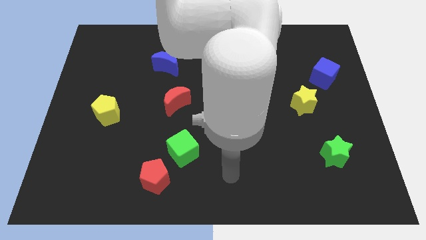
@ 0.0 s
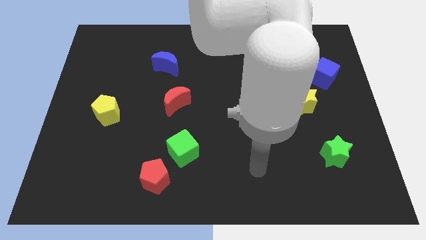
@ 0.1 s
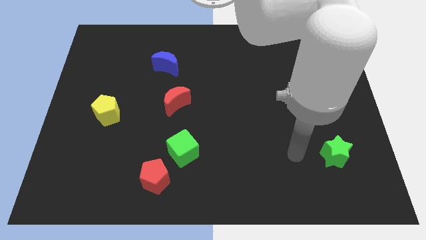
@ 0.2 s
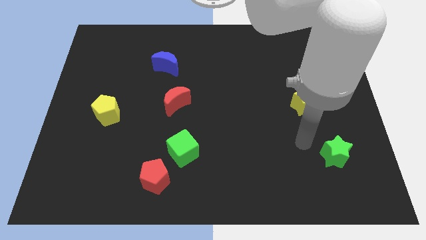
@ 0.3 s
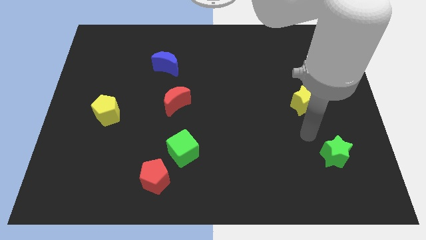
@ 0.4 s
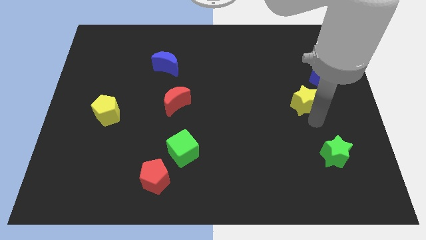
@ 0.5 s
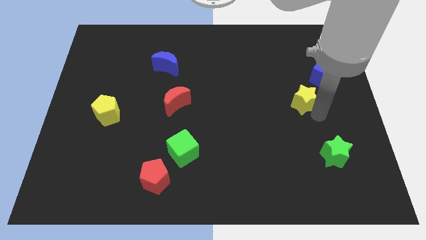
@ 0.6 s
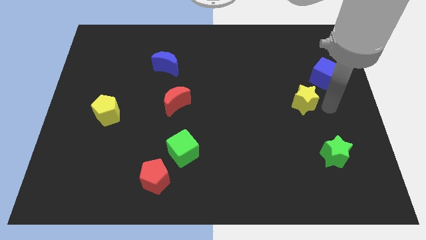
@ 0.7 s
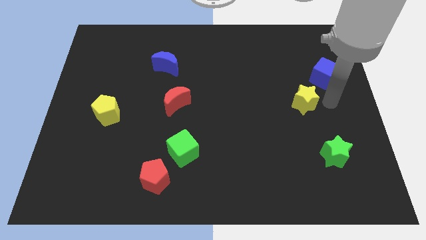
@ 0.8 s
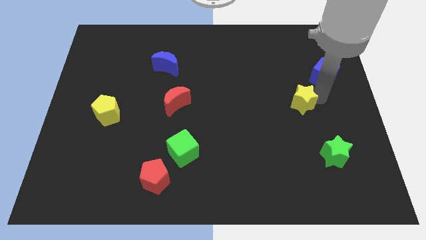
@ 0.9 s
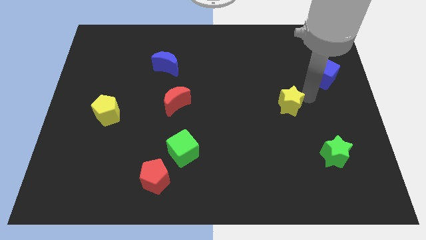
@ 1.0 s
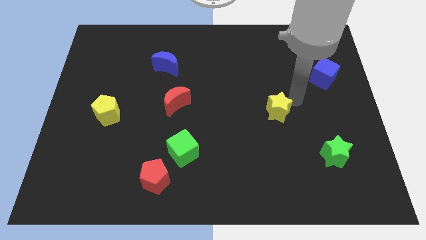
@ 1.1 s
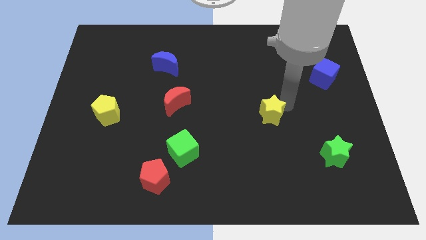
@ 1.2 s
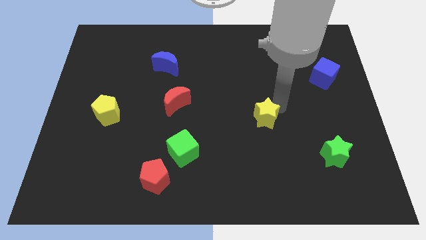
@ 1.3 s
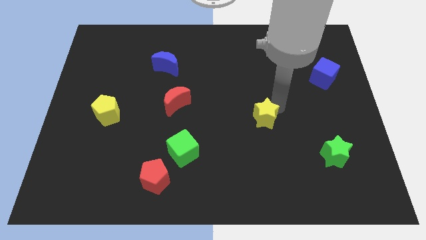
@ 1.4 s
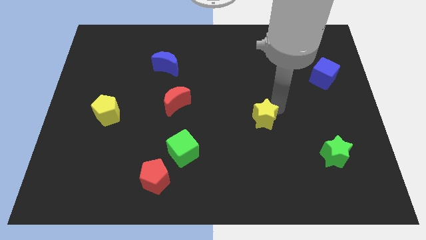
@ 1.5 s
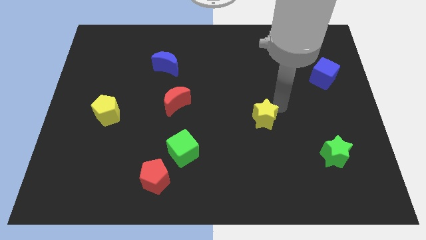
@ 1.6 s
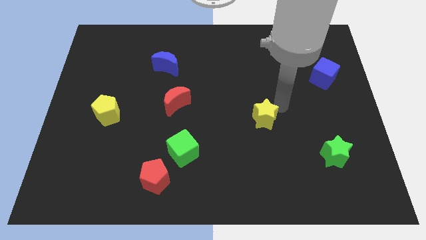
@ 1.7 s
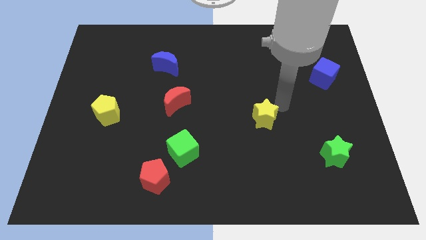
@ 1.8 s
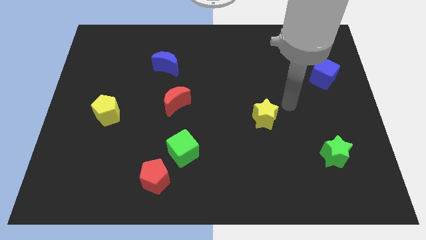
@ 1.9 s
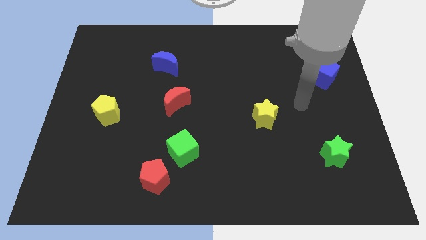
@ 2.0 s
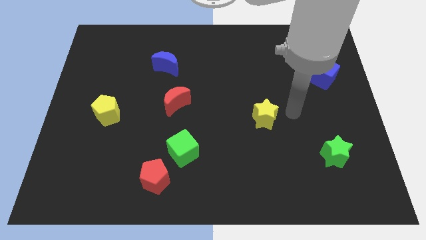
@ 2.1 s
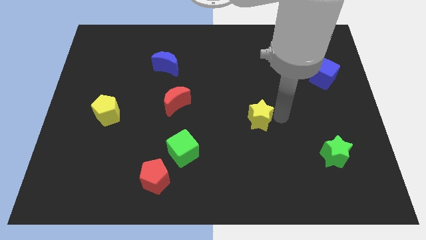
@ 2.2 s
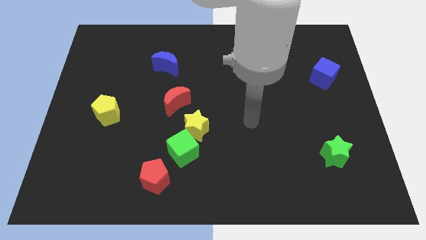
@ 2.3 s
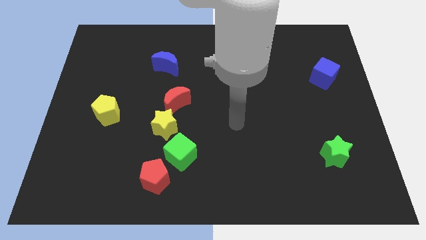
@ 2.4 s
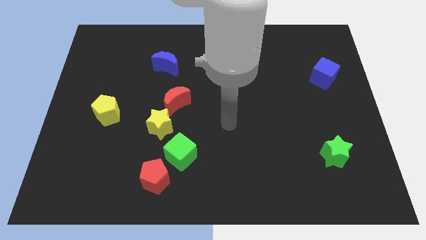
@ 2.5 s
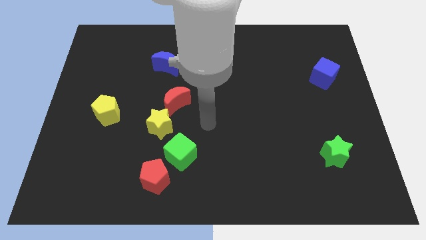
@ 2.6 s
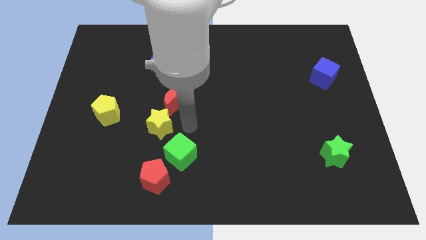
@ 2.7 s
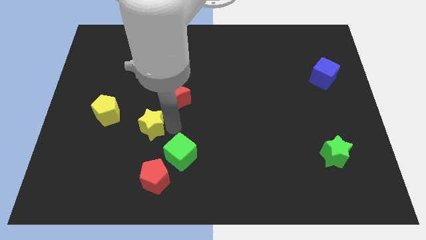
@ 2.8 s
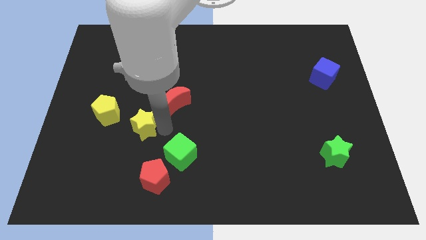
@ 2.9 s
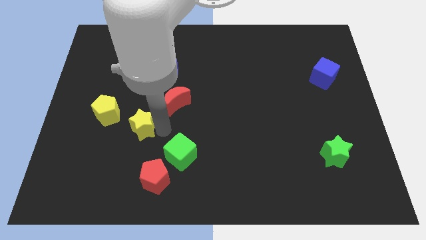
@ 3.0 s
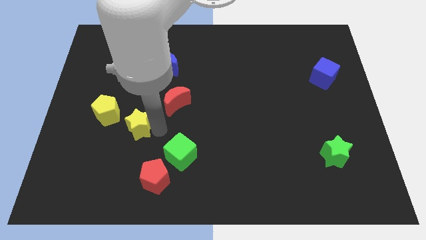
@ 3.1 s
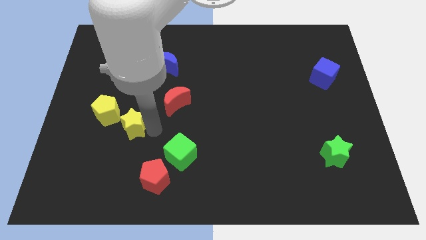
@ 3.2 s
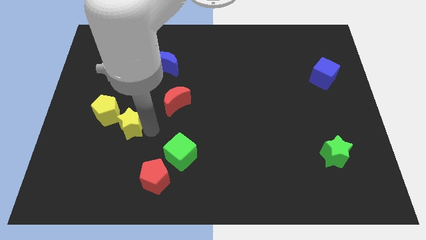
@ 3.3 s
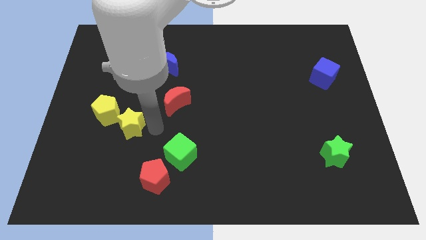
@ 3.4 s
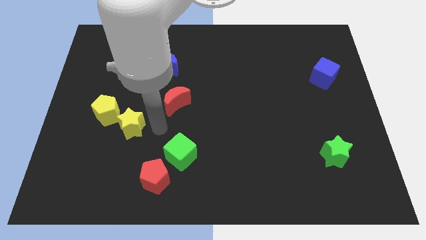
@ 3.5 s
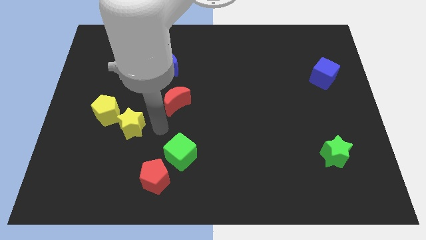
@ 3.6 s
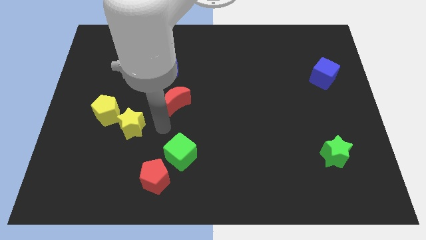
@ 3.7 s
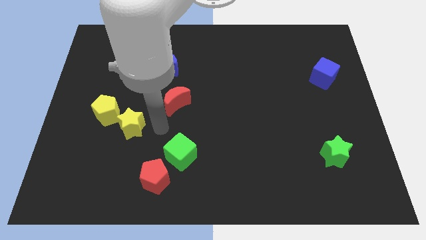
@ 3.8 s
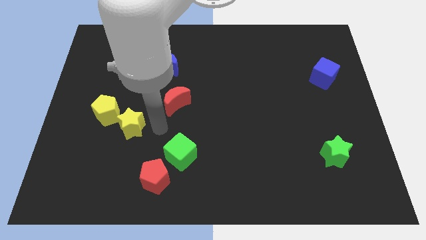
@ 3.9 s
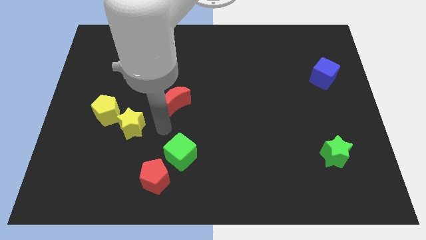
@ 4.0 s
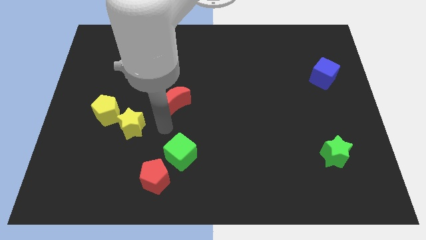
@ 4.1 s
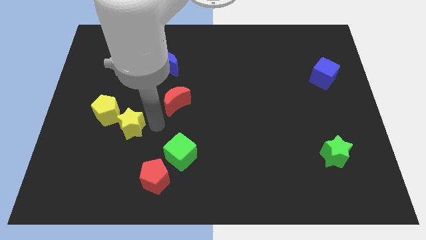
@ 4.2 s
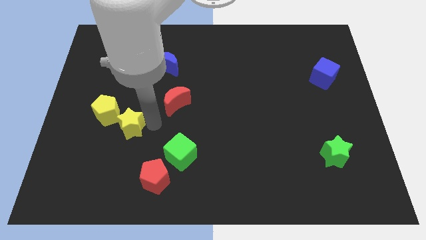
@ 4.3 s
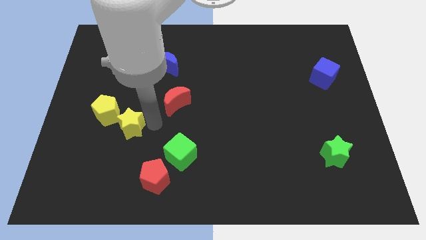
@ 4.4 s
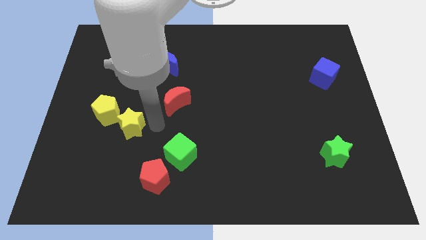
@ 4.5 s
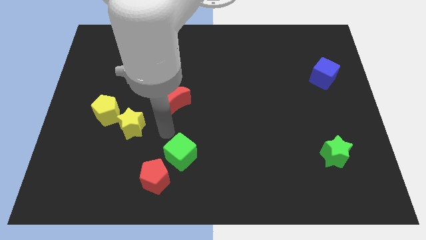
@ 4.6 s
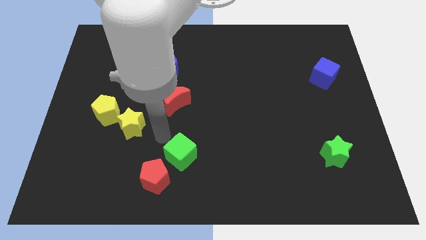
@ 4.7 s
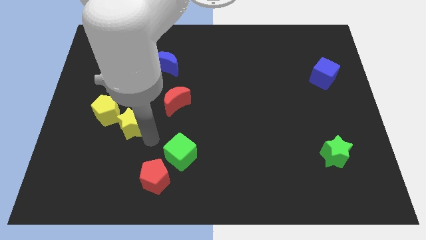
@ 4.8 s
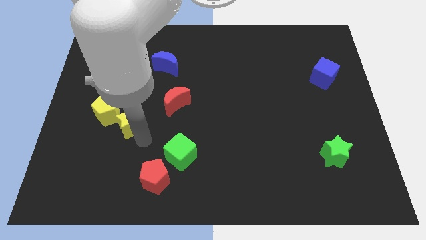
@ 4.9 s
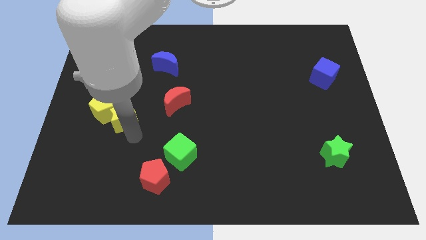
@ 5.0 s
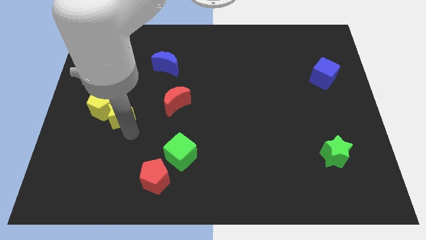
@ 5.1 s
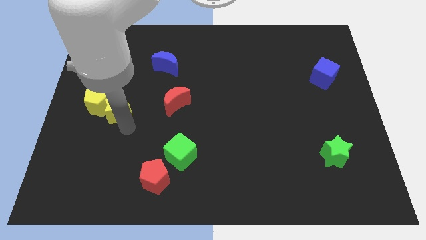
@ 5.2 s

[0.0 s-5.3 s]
slide the yellow star next to the yellow pentagon

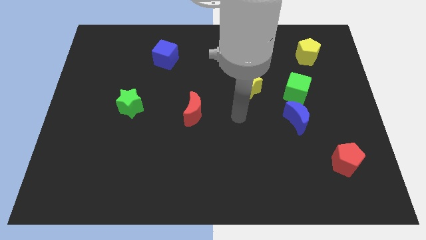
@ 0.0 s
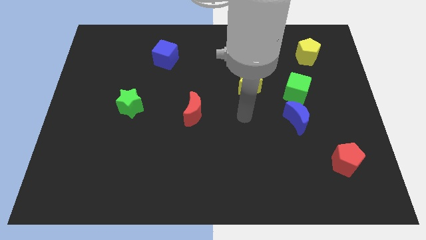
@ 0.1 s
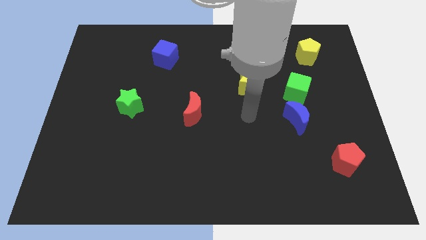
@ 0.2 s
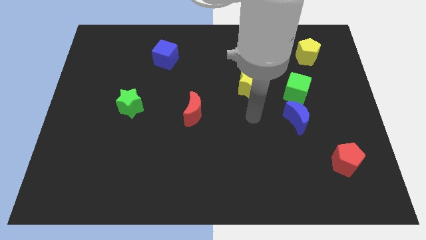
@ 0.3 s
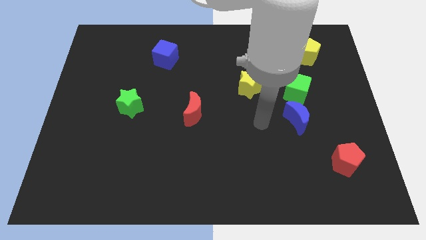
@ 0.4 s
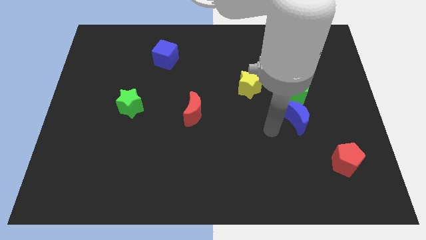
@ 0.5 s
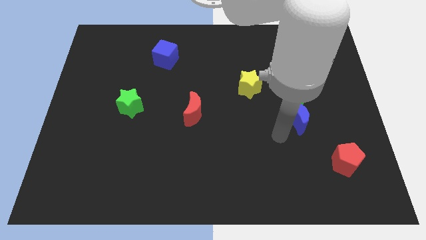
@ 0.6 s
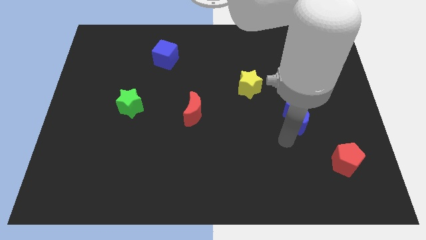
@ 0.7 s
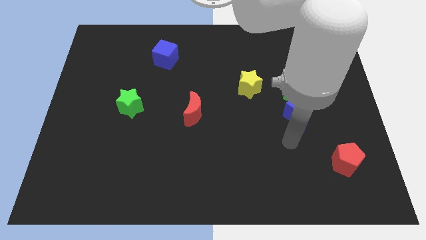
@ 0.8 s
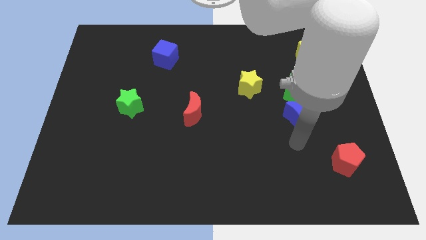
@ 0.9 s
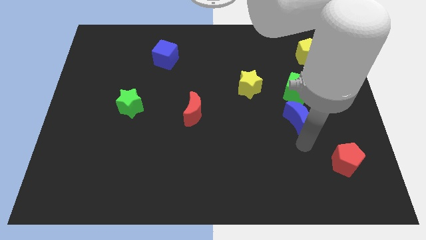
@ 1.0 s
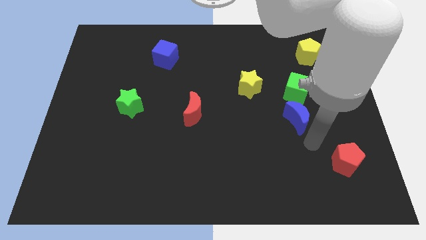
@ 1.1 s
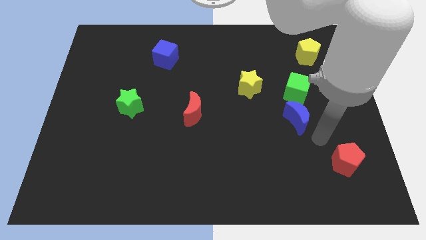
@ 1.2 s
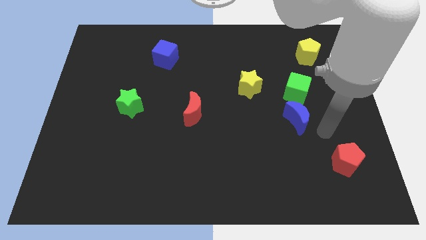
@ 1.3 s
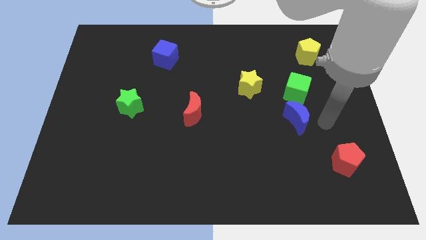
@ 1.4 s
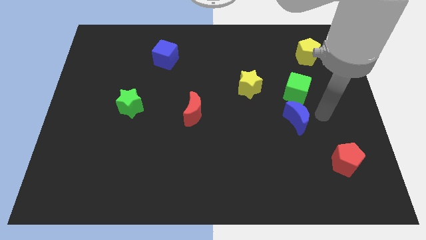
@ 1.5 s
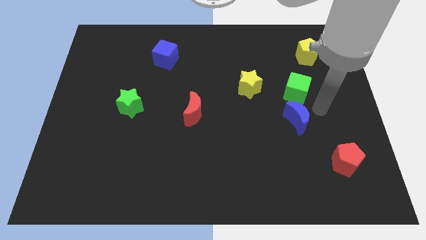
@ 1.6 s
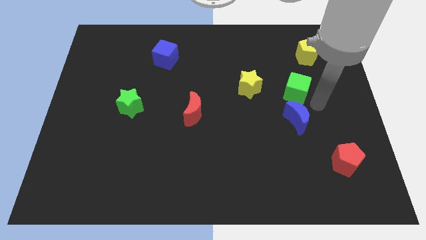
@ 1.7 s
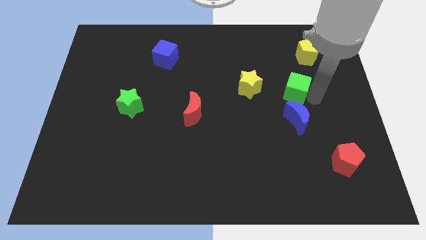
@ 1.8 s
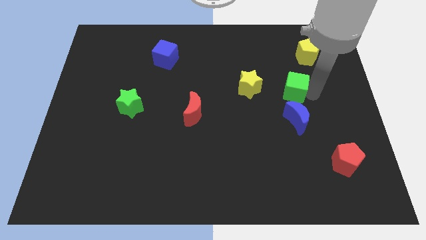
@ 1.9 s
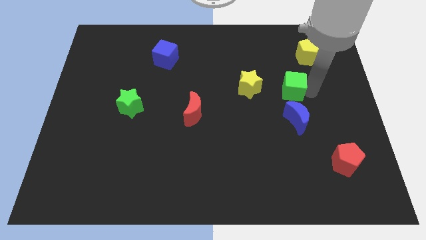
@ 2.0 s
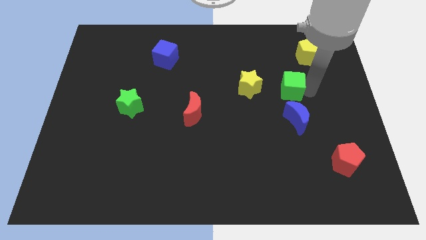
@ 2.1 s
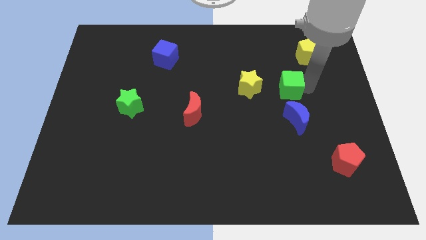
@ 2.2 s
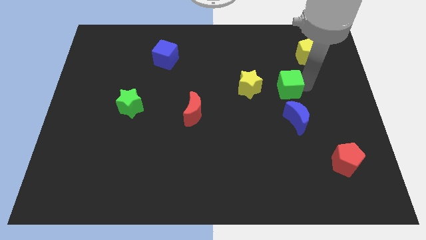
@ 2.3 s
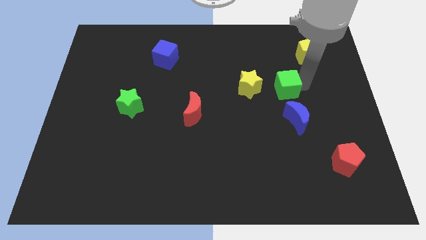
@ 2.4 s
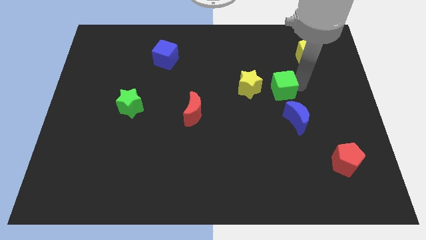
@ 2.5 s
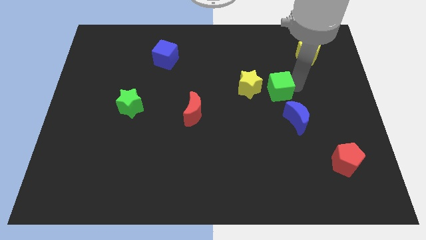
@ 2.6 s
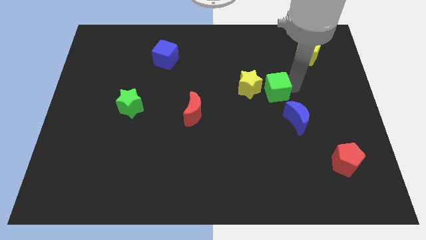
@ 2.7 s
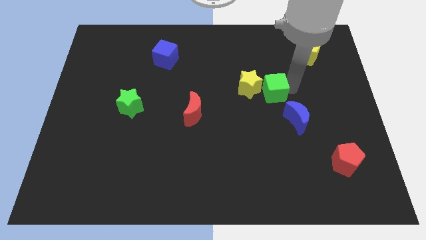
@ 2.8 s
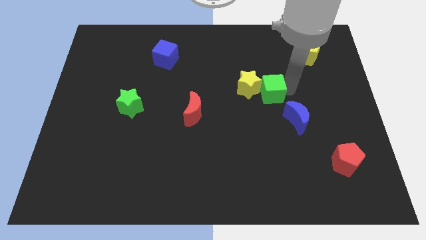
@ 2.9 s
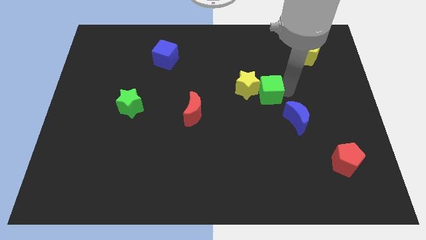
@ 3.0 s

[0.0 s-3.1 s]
push the green cube close to the yellow star
